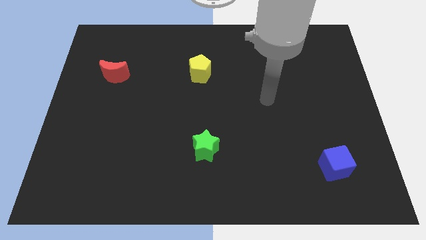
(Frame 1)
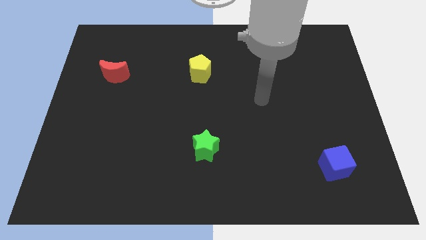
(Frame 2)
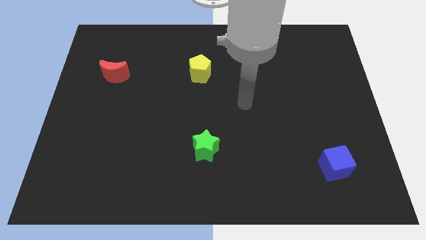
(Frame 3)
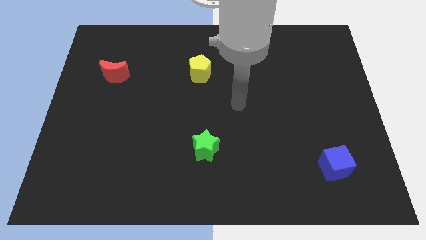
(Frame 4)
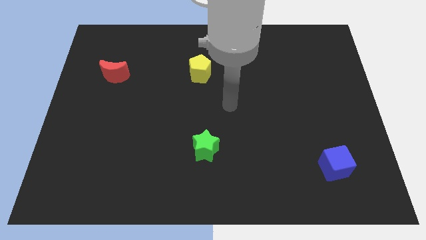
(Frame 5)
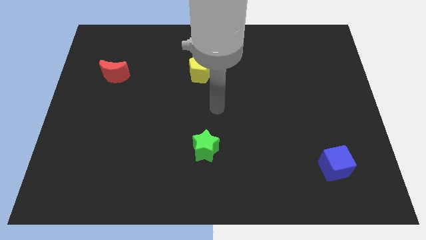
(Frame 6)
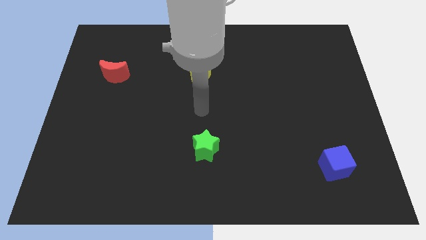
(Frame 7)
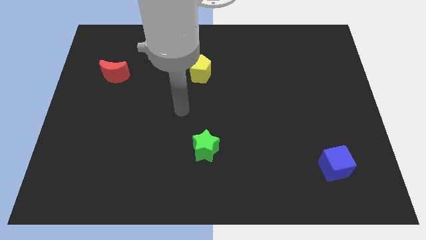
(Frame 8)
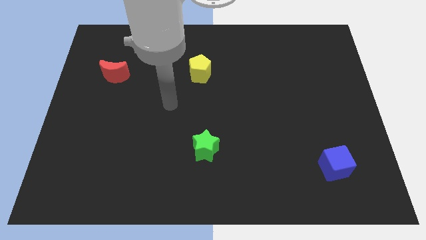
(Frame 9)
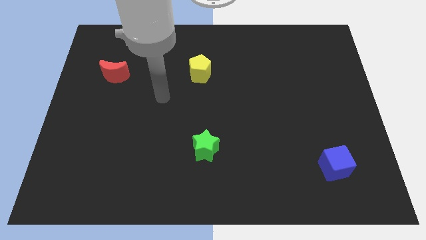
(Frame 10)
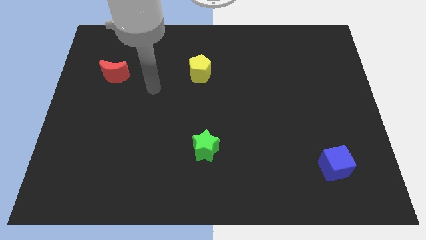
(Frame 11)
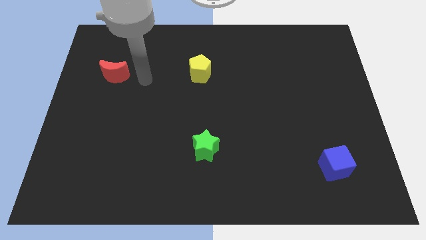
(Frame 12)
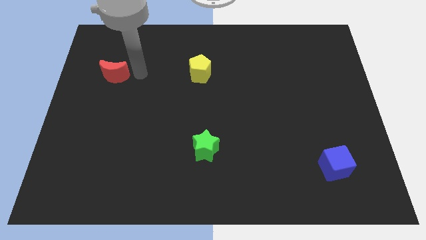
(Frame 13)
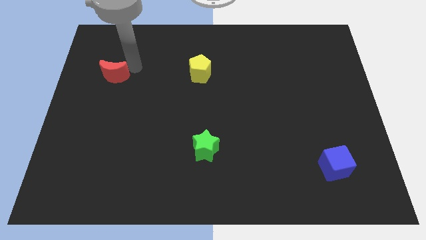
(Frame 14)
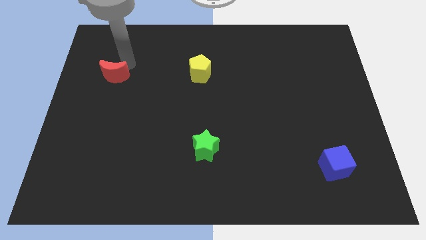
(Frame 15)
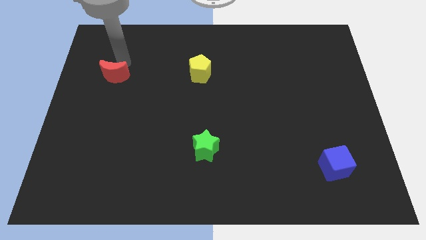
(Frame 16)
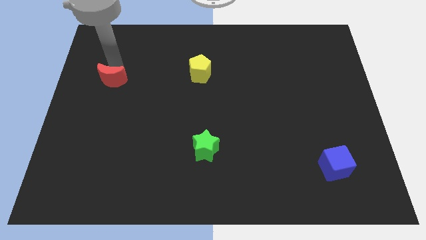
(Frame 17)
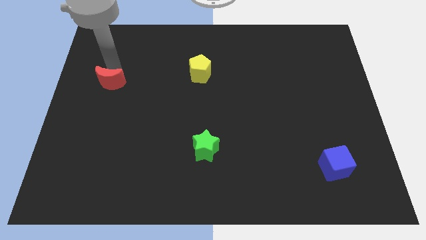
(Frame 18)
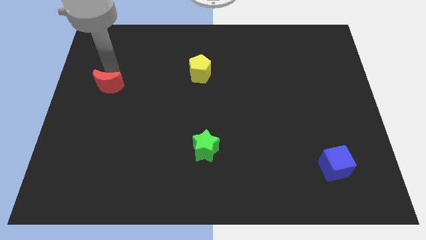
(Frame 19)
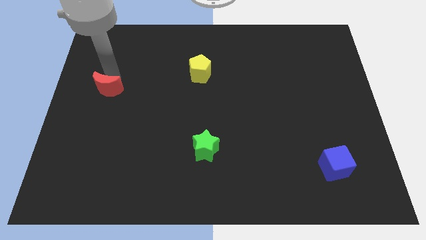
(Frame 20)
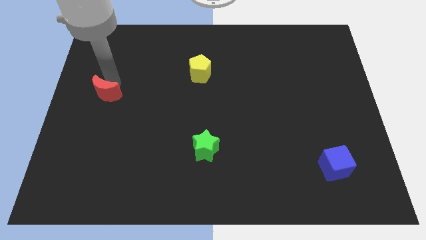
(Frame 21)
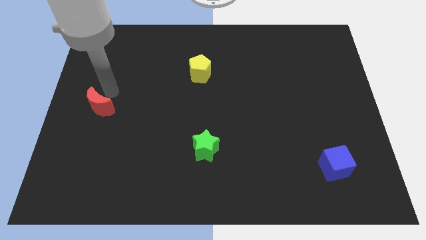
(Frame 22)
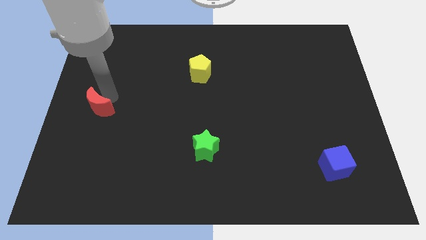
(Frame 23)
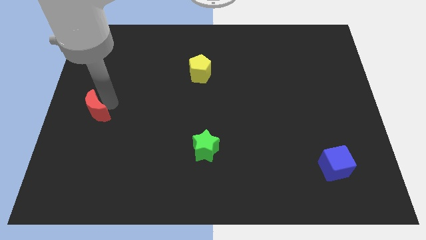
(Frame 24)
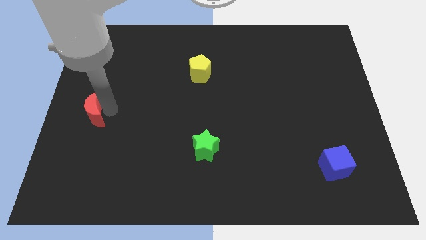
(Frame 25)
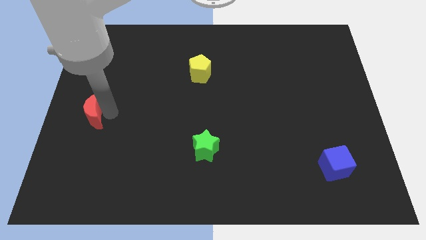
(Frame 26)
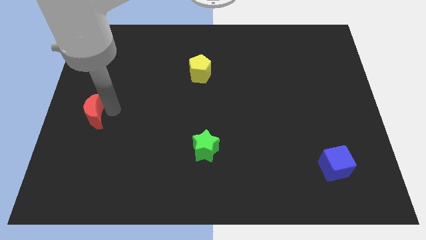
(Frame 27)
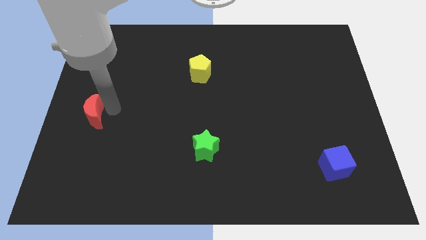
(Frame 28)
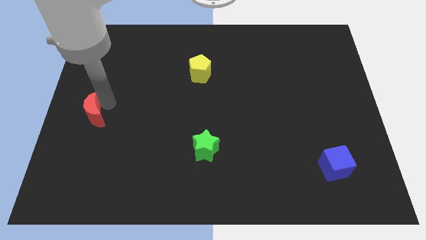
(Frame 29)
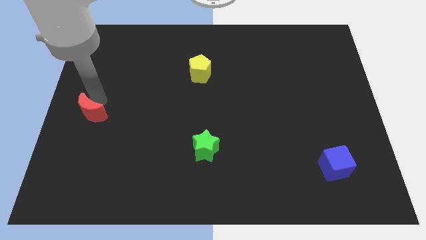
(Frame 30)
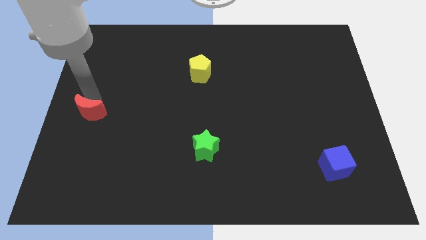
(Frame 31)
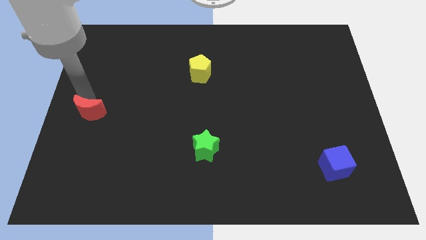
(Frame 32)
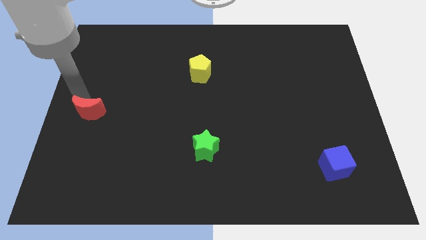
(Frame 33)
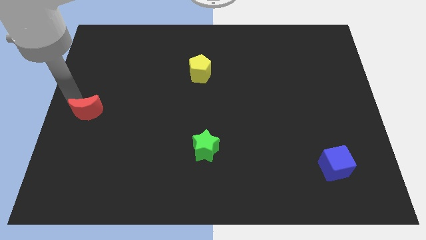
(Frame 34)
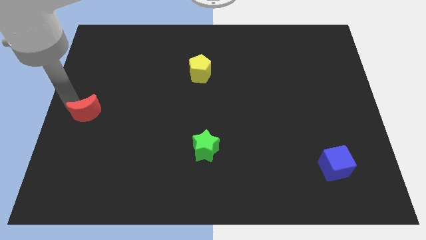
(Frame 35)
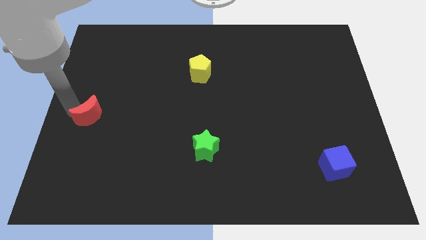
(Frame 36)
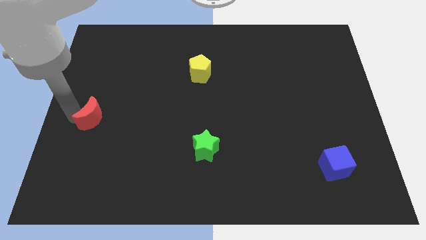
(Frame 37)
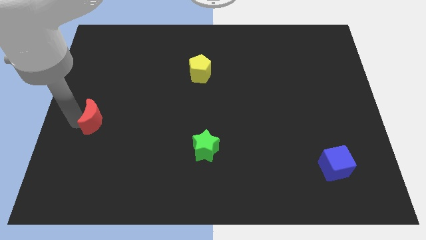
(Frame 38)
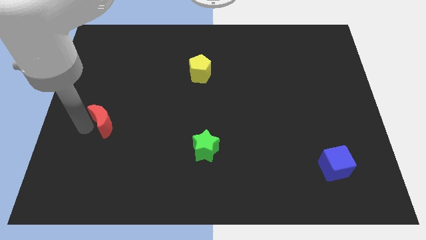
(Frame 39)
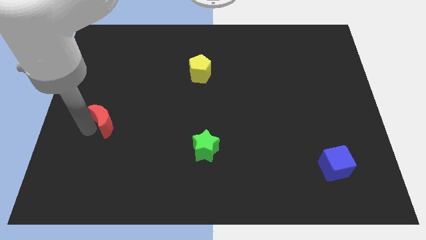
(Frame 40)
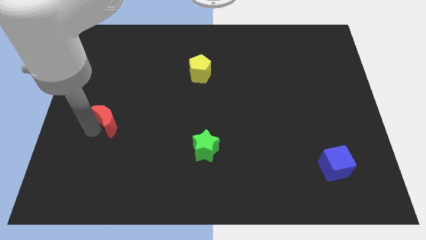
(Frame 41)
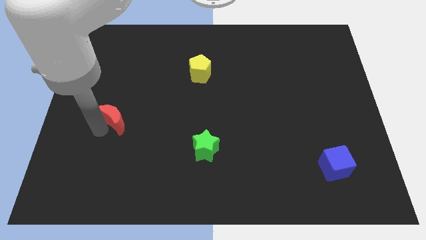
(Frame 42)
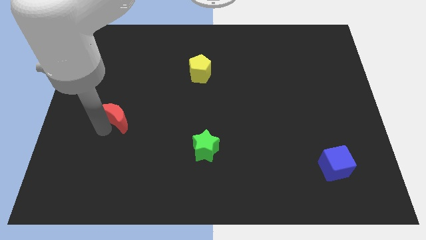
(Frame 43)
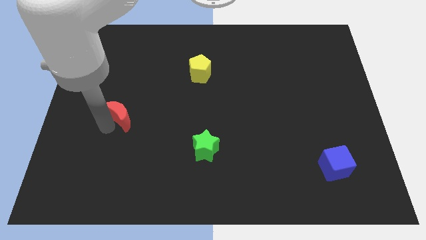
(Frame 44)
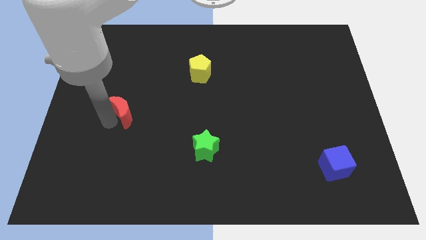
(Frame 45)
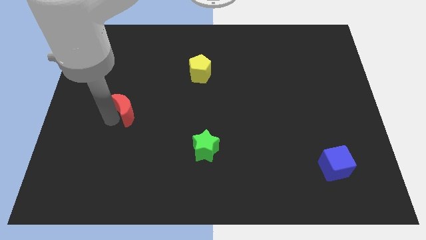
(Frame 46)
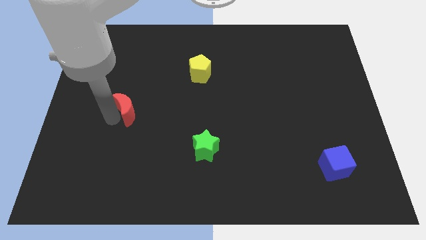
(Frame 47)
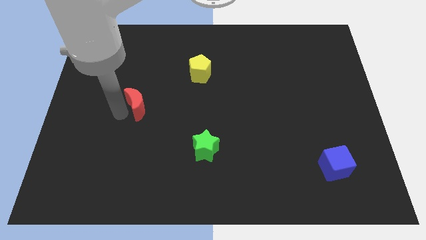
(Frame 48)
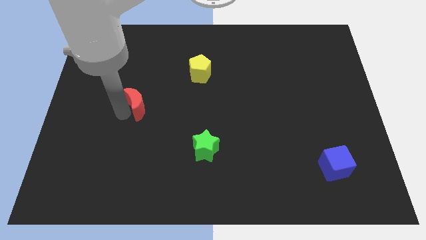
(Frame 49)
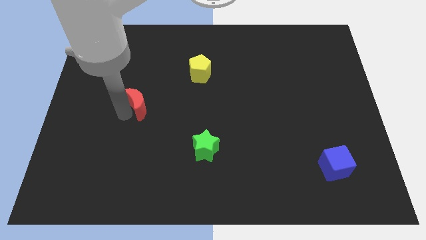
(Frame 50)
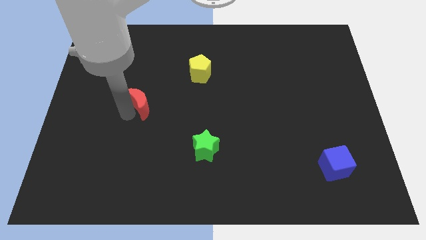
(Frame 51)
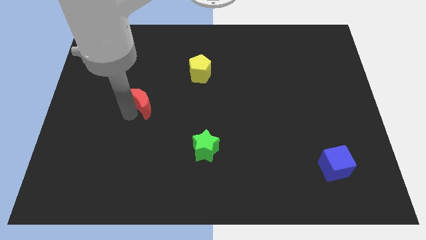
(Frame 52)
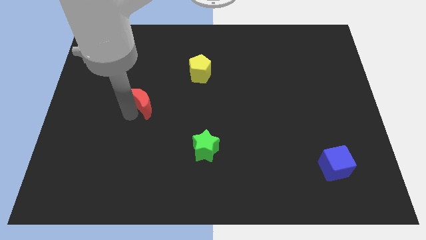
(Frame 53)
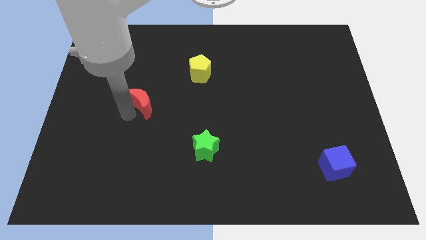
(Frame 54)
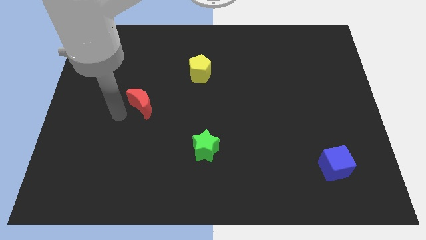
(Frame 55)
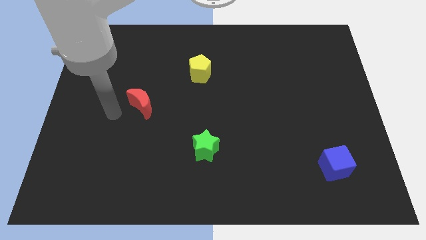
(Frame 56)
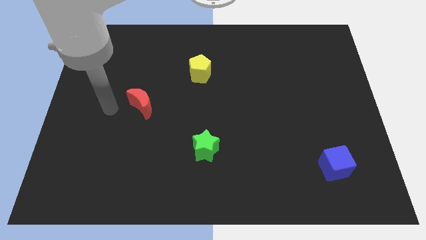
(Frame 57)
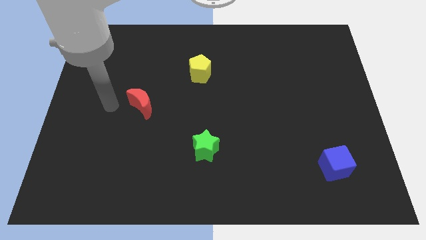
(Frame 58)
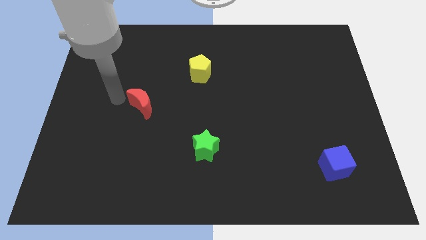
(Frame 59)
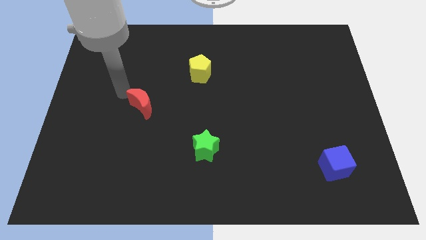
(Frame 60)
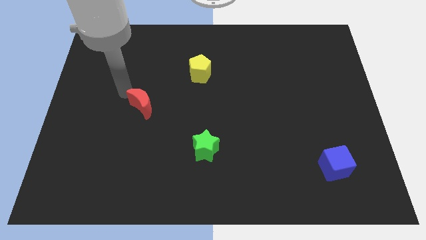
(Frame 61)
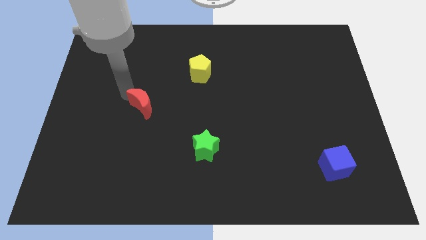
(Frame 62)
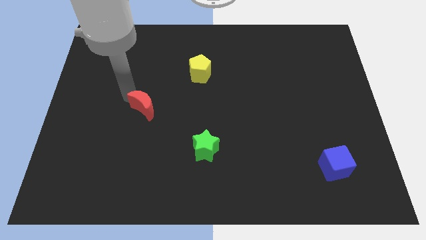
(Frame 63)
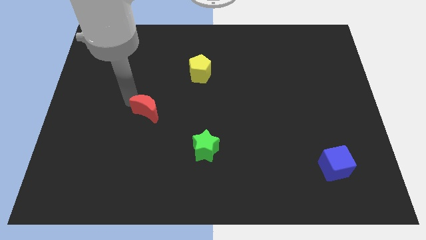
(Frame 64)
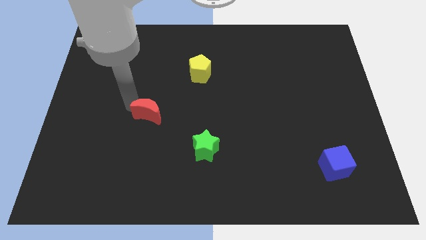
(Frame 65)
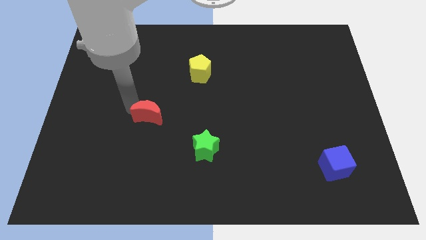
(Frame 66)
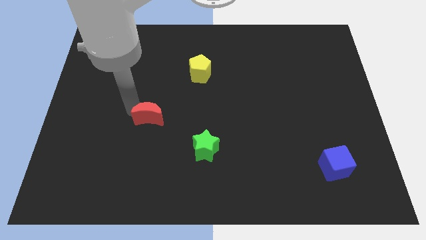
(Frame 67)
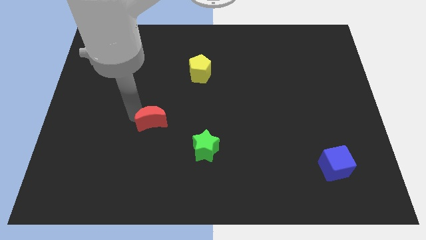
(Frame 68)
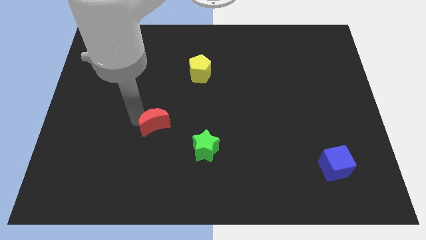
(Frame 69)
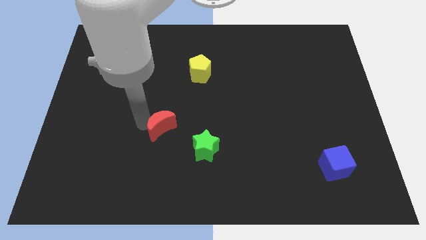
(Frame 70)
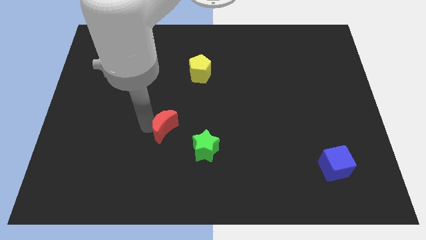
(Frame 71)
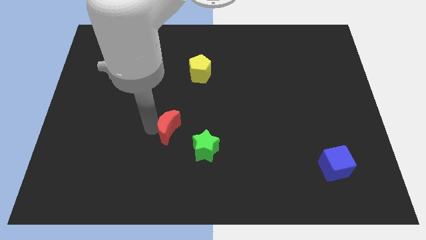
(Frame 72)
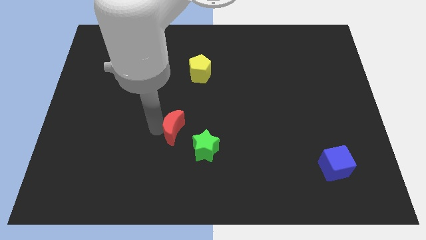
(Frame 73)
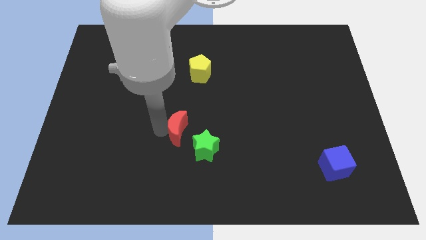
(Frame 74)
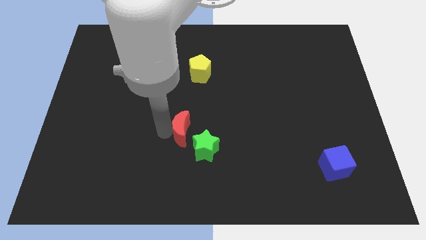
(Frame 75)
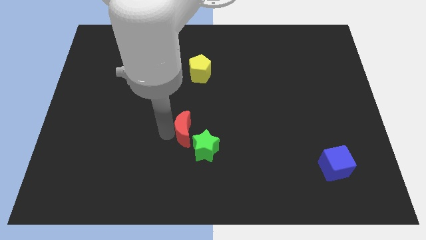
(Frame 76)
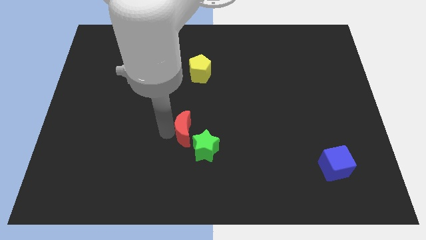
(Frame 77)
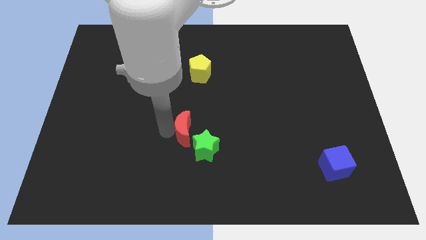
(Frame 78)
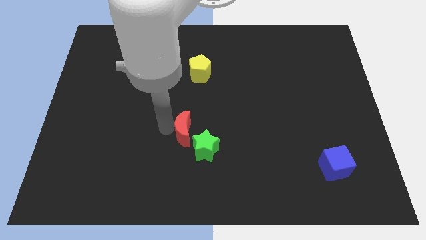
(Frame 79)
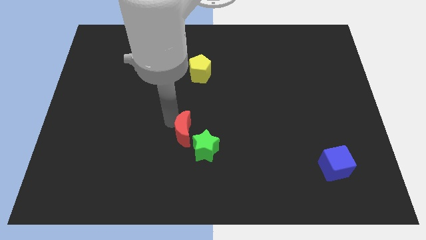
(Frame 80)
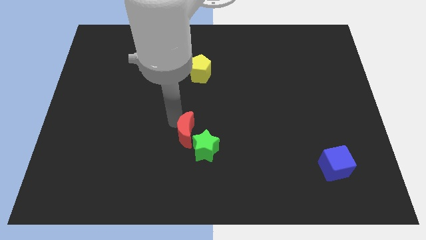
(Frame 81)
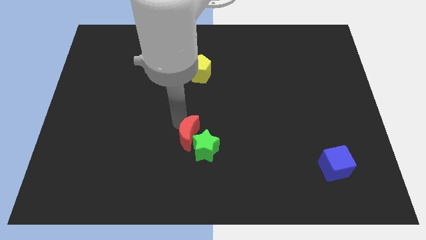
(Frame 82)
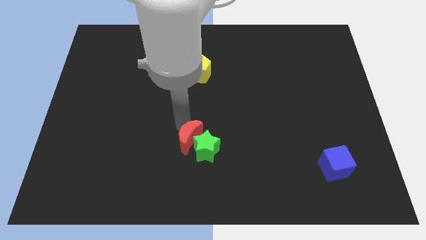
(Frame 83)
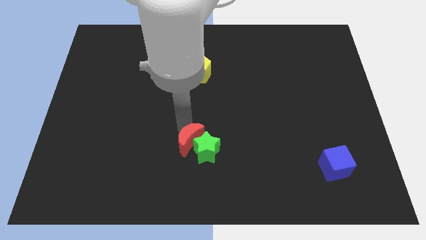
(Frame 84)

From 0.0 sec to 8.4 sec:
slide the moon next to the green block
